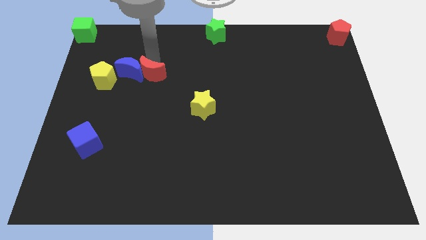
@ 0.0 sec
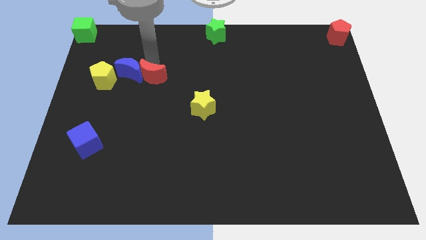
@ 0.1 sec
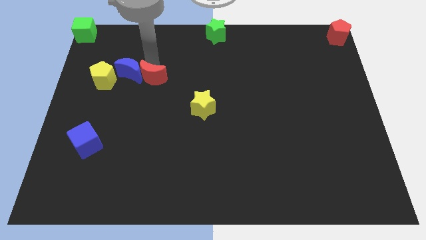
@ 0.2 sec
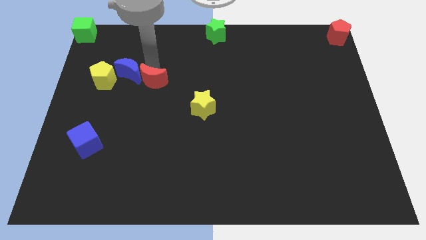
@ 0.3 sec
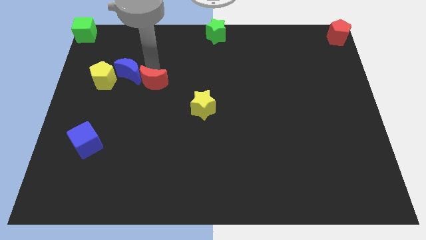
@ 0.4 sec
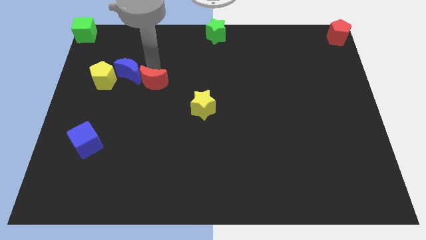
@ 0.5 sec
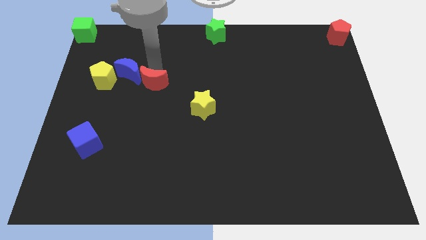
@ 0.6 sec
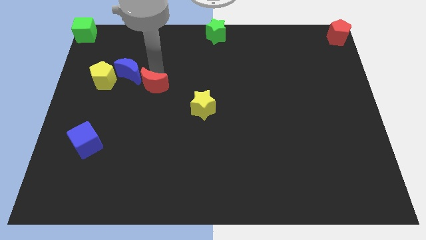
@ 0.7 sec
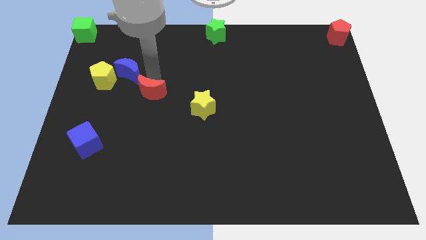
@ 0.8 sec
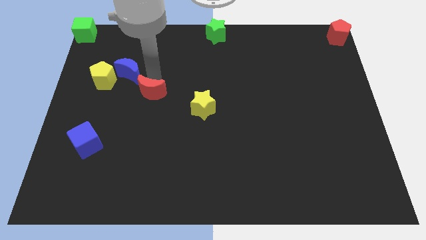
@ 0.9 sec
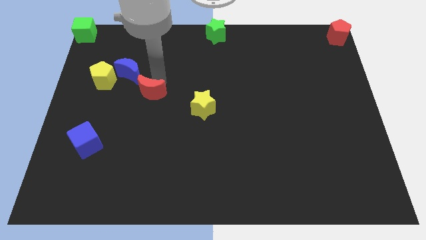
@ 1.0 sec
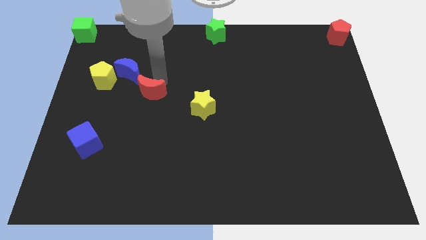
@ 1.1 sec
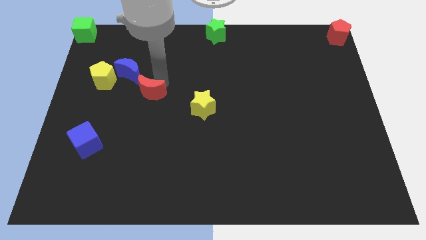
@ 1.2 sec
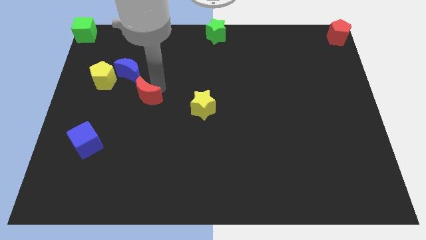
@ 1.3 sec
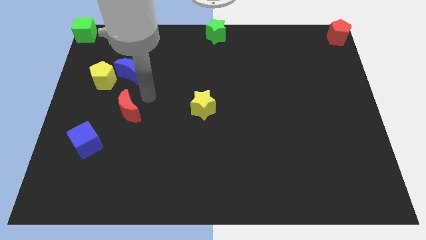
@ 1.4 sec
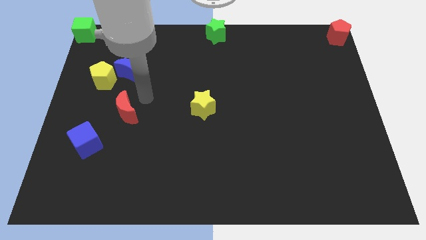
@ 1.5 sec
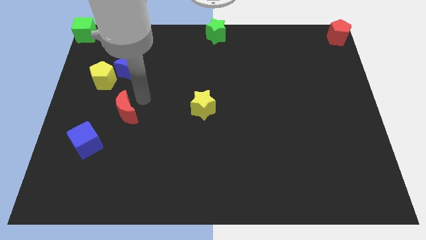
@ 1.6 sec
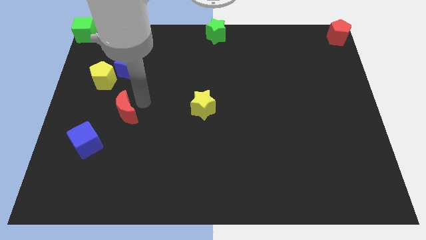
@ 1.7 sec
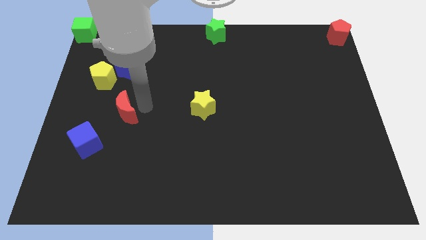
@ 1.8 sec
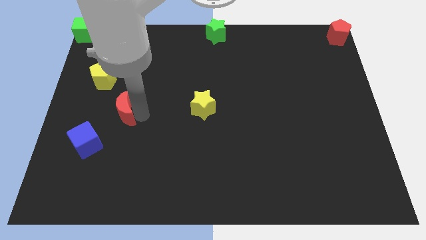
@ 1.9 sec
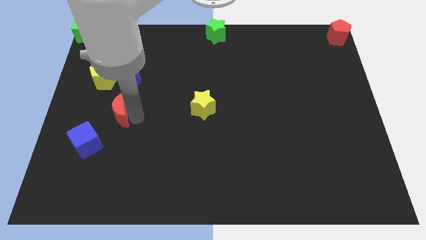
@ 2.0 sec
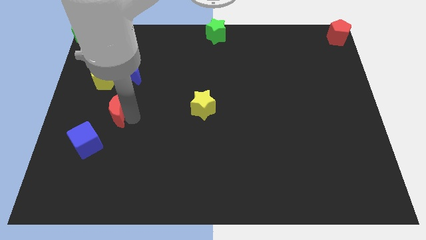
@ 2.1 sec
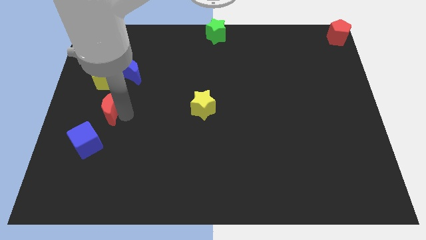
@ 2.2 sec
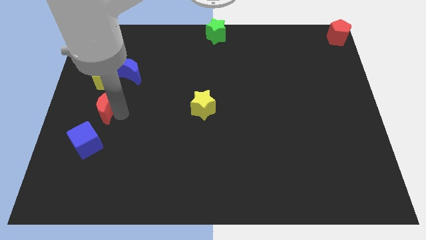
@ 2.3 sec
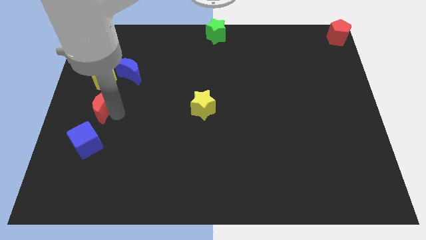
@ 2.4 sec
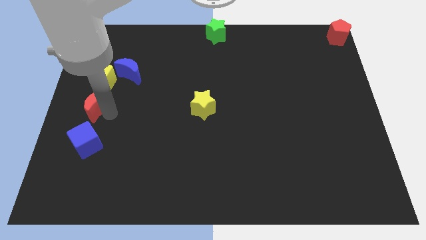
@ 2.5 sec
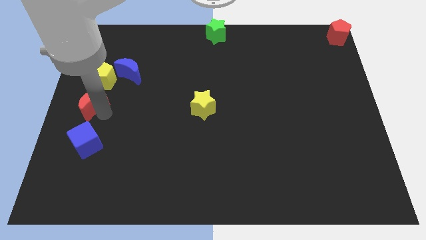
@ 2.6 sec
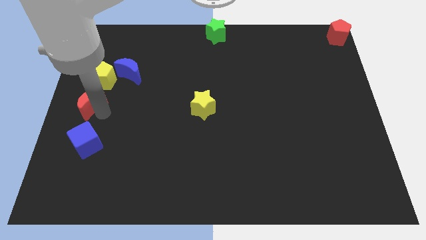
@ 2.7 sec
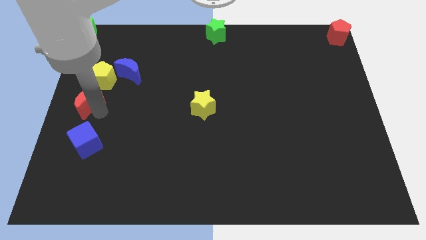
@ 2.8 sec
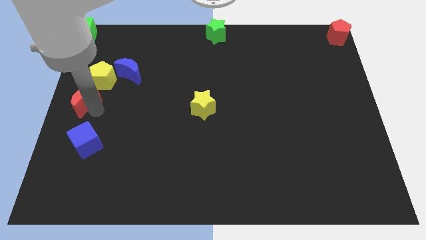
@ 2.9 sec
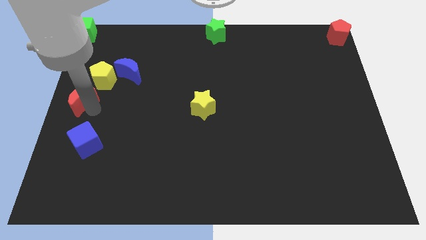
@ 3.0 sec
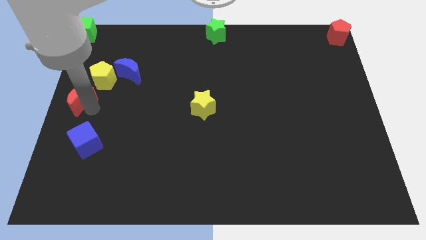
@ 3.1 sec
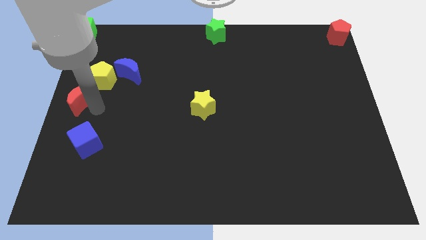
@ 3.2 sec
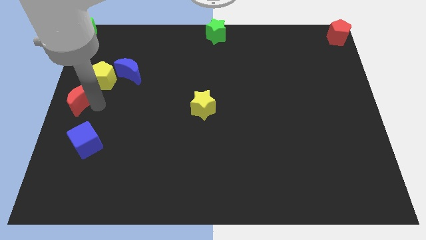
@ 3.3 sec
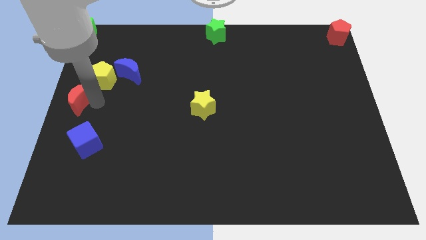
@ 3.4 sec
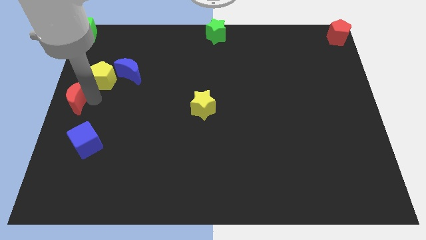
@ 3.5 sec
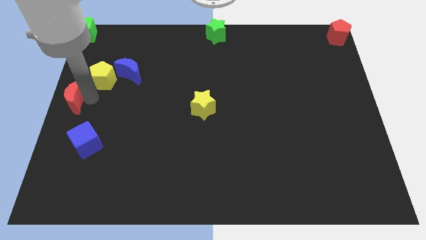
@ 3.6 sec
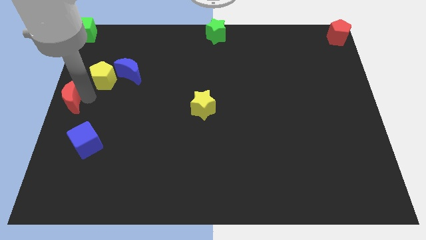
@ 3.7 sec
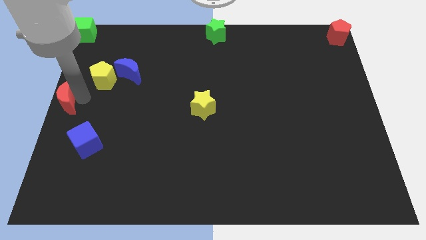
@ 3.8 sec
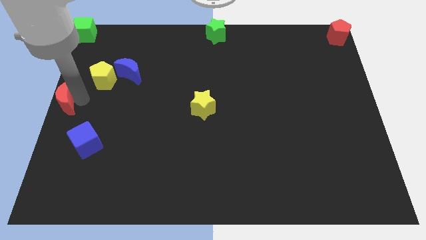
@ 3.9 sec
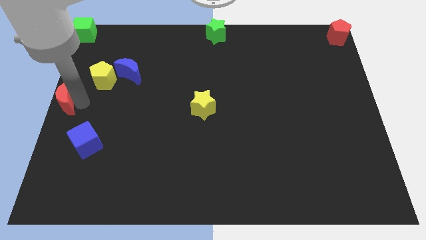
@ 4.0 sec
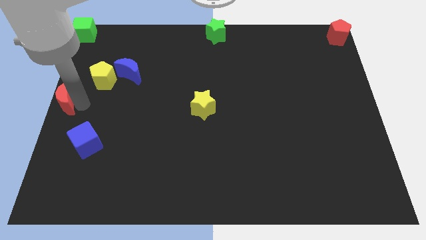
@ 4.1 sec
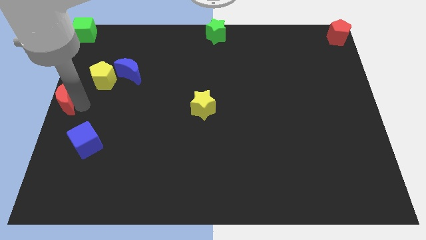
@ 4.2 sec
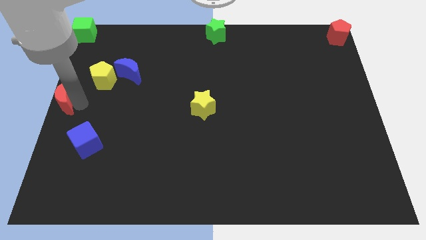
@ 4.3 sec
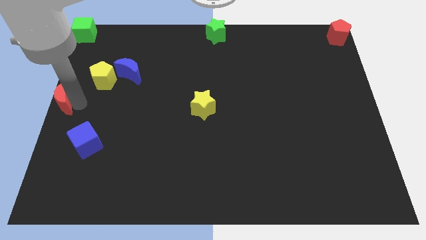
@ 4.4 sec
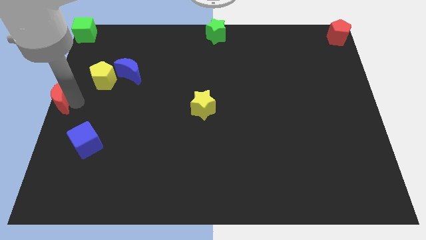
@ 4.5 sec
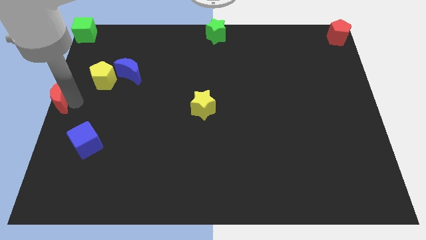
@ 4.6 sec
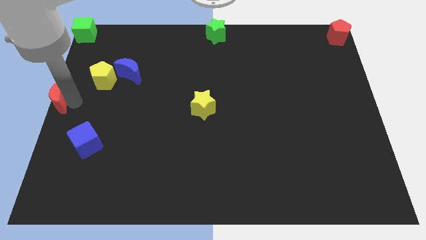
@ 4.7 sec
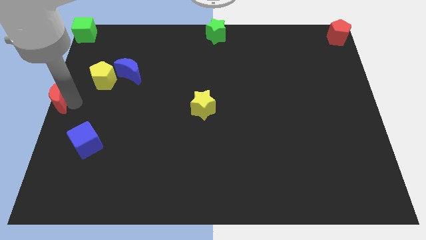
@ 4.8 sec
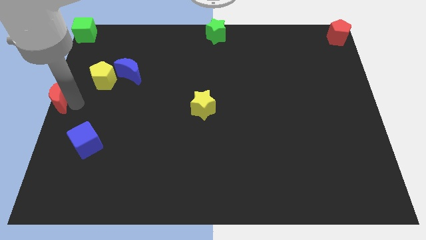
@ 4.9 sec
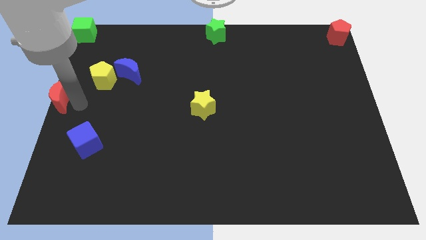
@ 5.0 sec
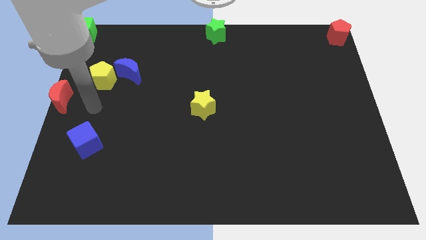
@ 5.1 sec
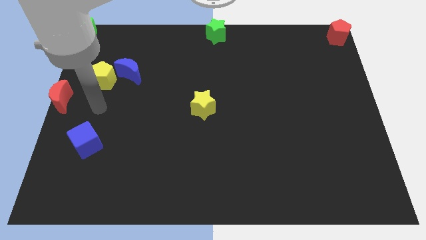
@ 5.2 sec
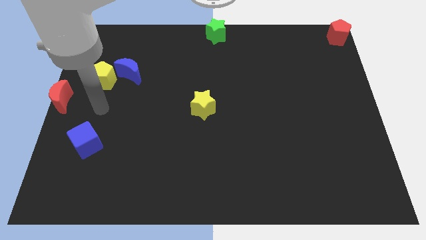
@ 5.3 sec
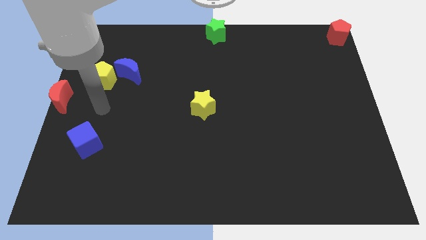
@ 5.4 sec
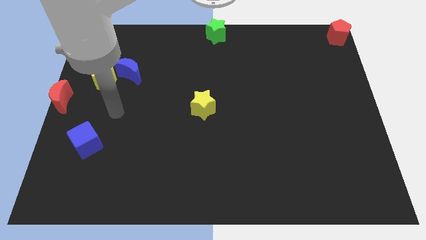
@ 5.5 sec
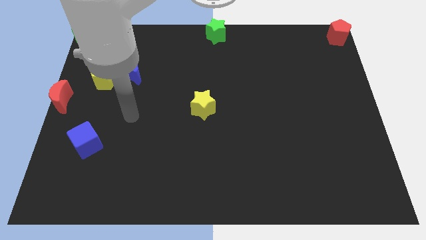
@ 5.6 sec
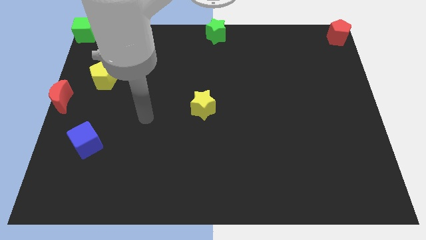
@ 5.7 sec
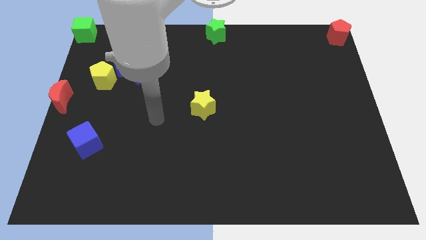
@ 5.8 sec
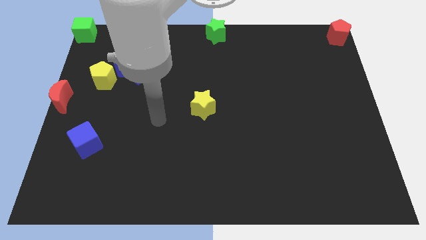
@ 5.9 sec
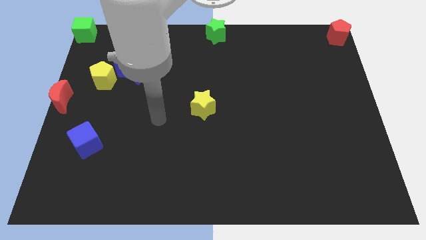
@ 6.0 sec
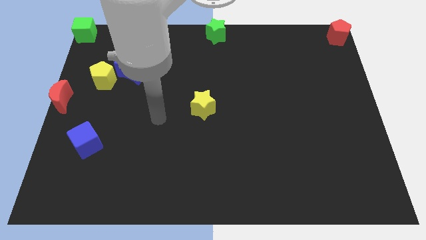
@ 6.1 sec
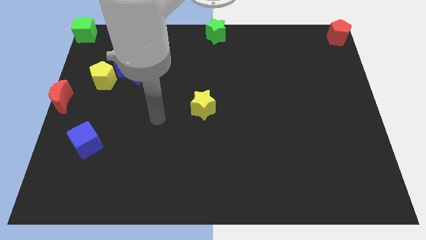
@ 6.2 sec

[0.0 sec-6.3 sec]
move red moon to the left side of the board

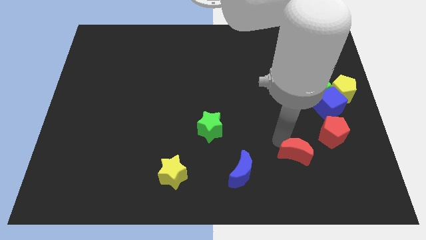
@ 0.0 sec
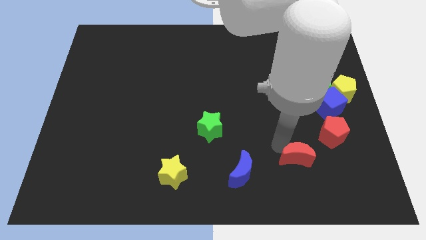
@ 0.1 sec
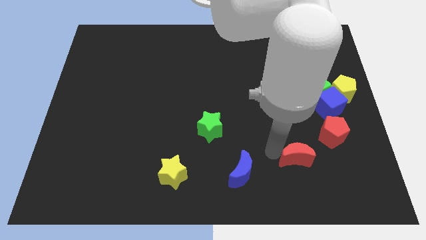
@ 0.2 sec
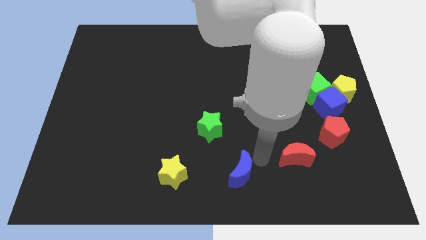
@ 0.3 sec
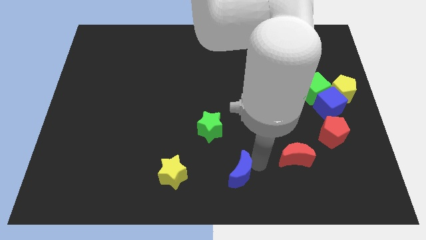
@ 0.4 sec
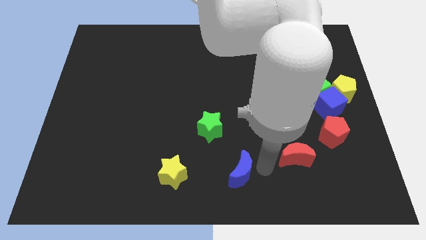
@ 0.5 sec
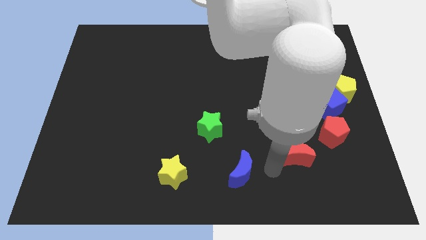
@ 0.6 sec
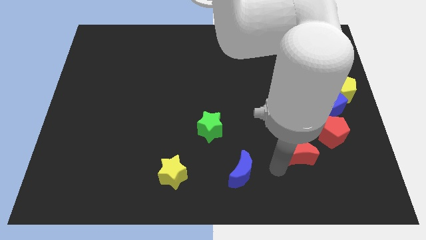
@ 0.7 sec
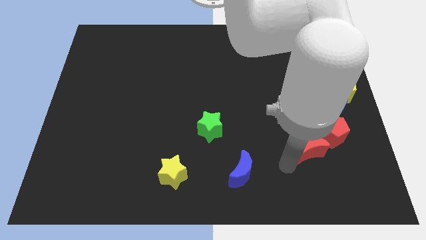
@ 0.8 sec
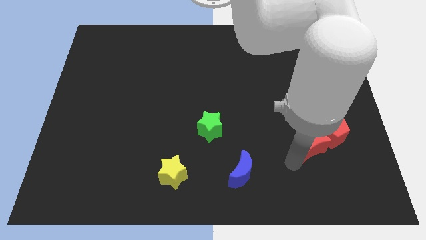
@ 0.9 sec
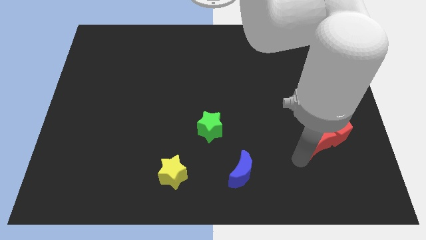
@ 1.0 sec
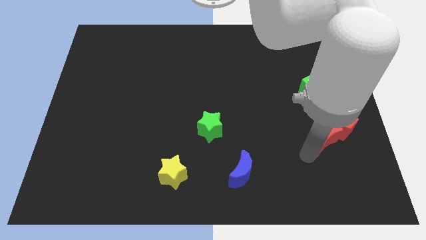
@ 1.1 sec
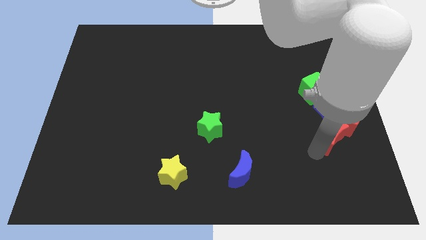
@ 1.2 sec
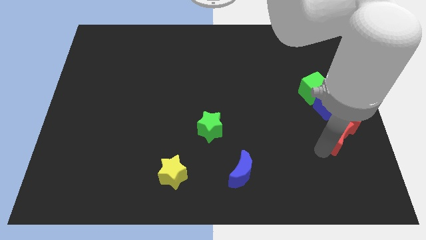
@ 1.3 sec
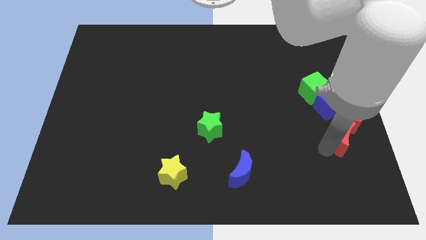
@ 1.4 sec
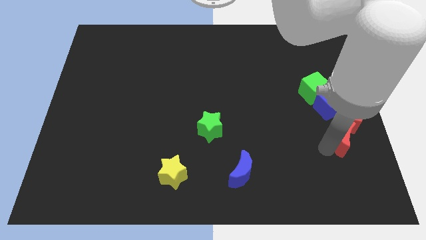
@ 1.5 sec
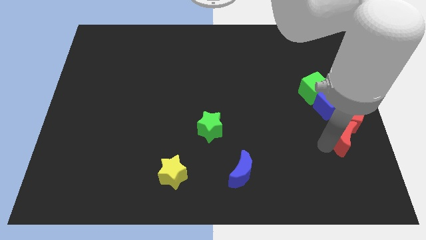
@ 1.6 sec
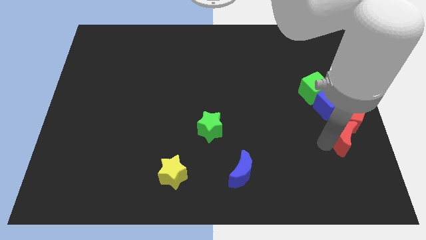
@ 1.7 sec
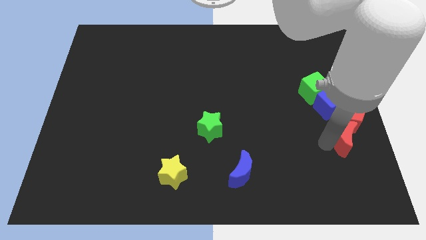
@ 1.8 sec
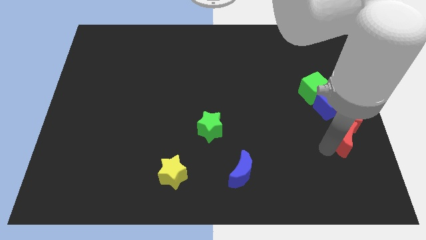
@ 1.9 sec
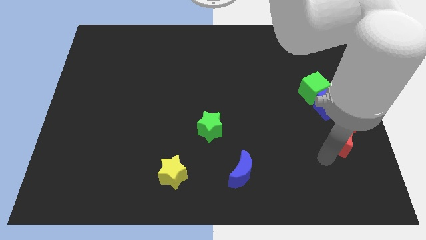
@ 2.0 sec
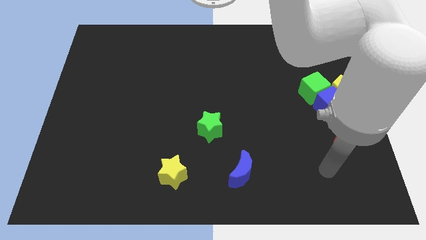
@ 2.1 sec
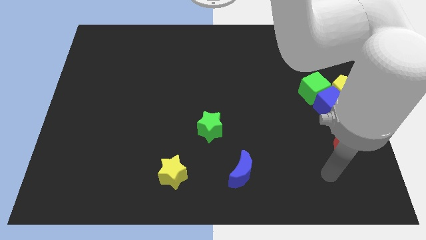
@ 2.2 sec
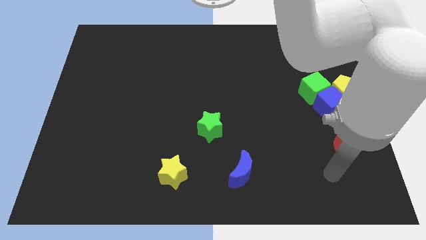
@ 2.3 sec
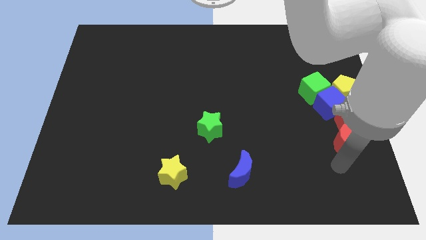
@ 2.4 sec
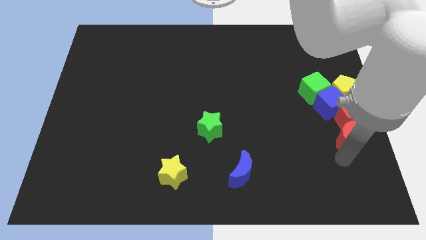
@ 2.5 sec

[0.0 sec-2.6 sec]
move red crescent below the red pentagon

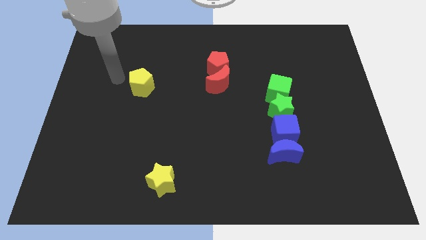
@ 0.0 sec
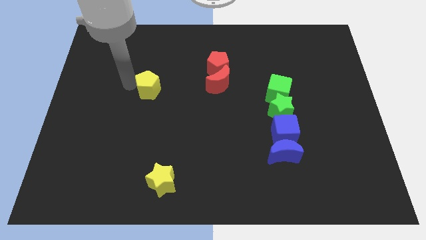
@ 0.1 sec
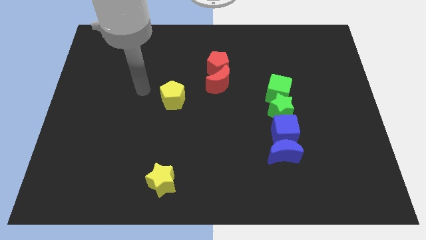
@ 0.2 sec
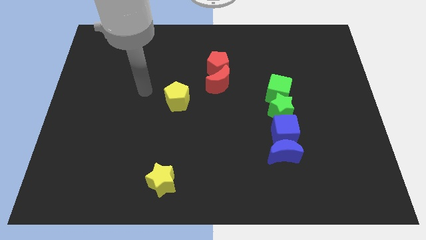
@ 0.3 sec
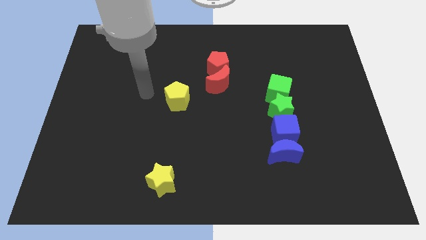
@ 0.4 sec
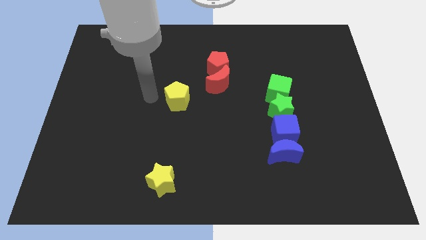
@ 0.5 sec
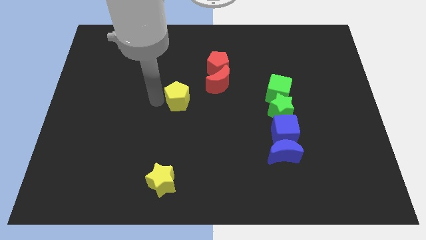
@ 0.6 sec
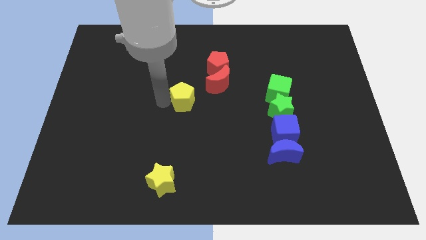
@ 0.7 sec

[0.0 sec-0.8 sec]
move the yellow pentagon above the yellow star
